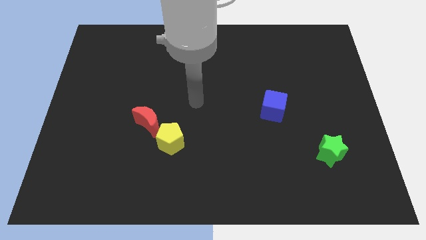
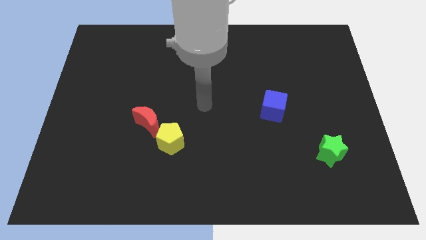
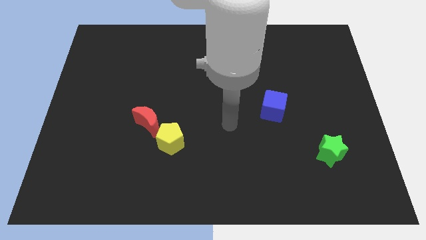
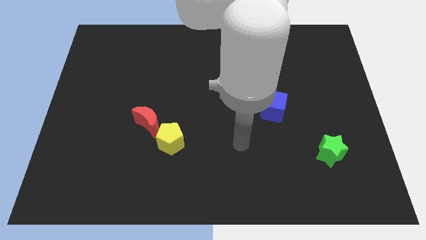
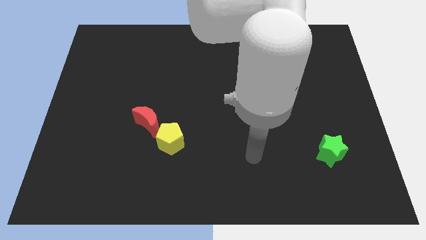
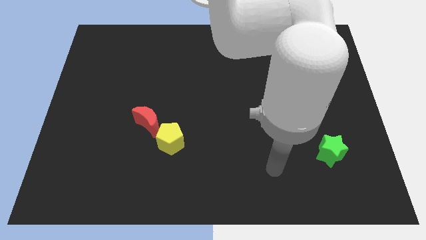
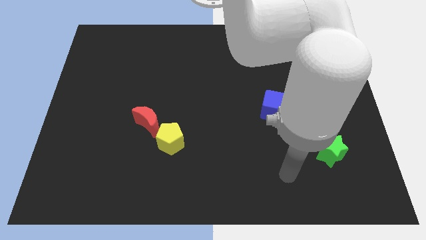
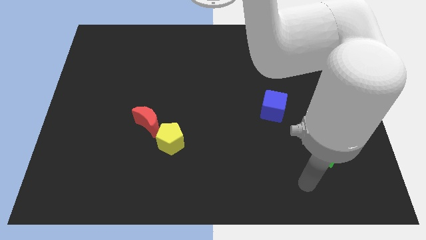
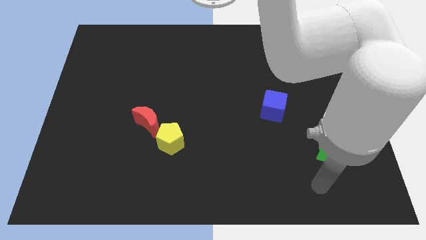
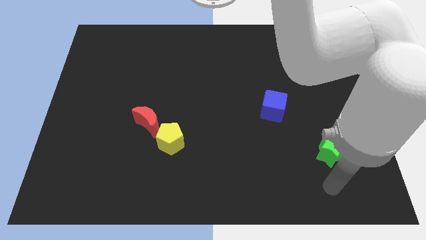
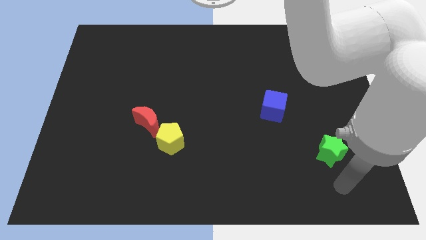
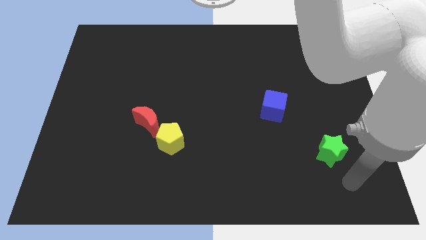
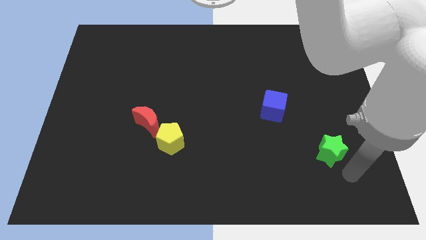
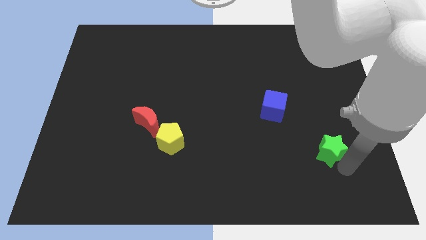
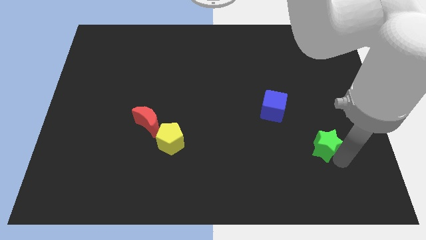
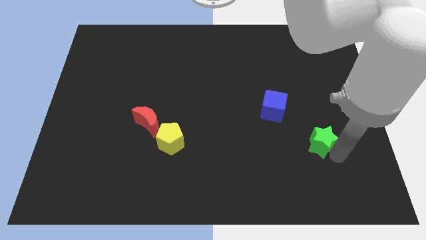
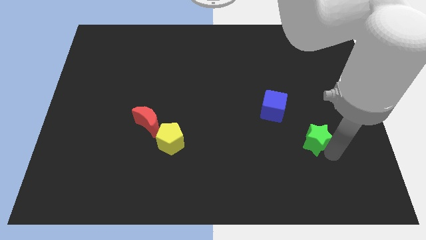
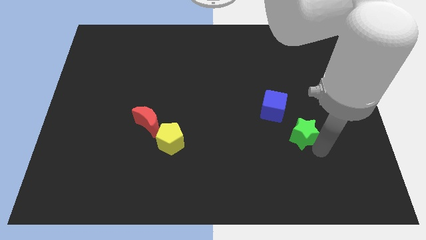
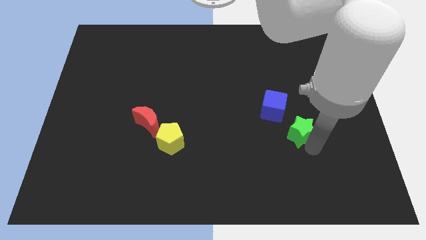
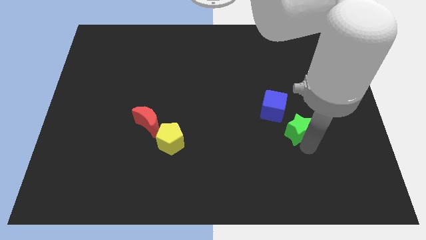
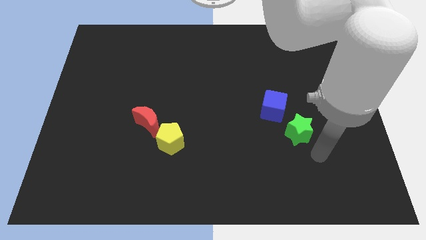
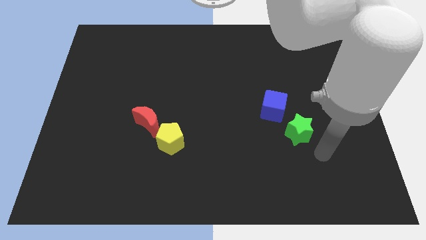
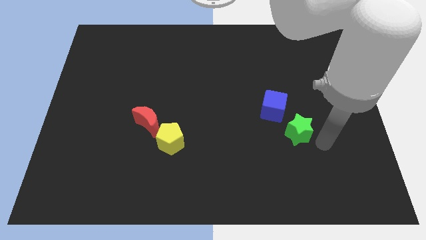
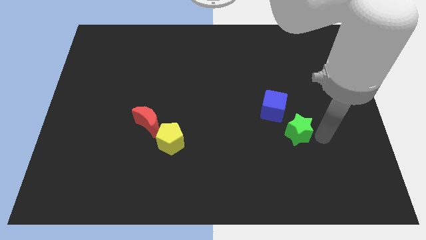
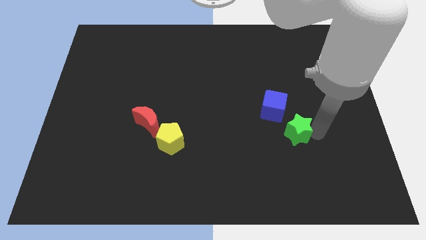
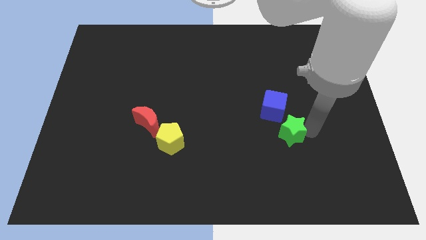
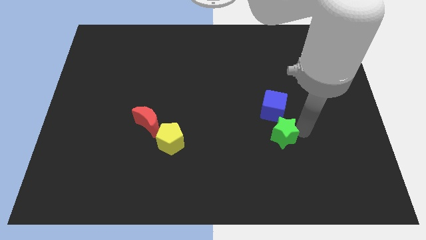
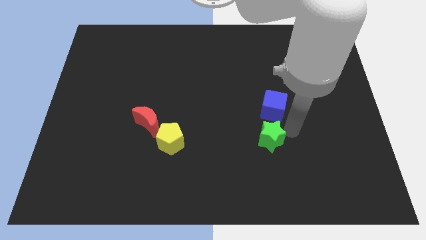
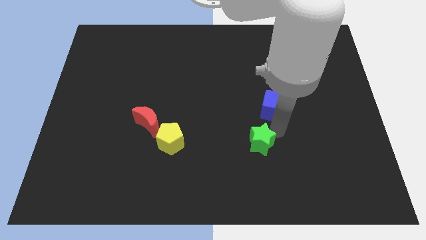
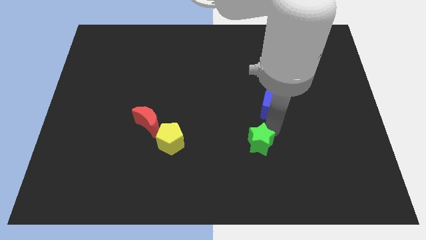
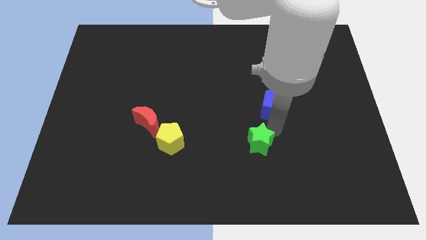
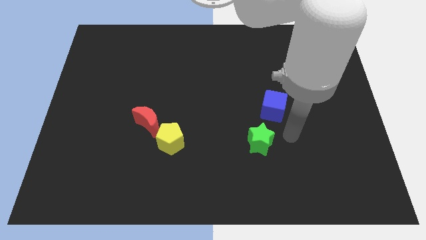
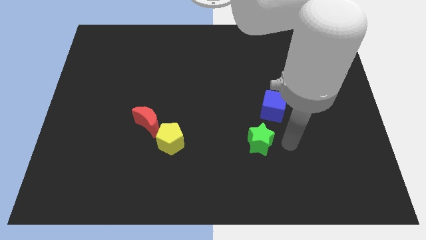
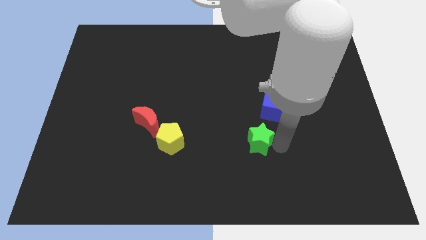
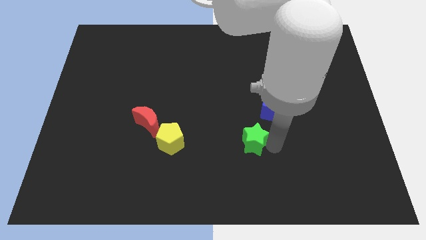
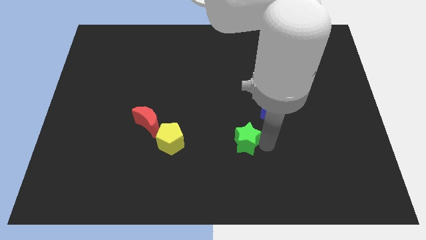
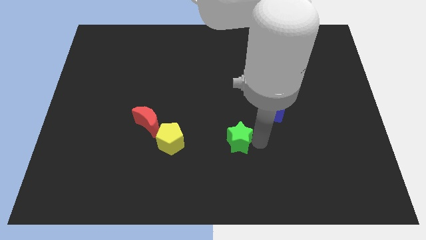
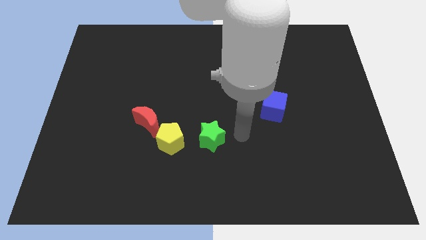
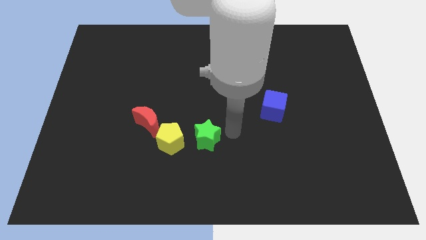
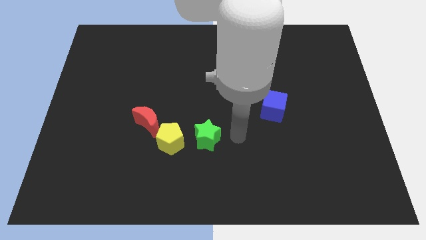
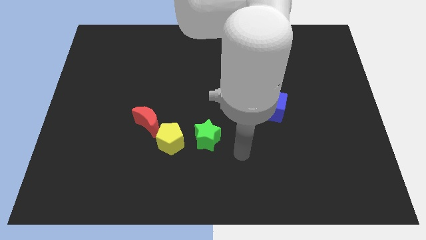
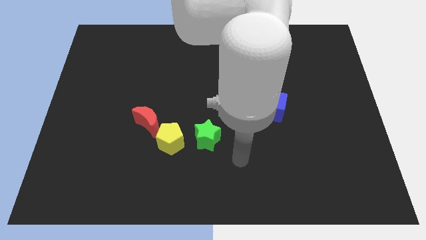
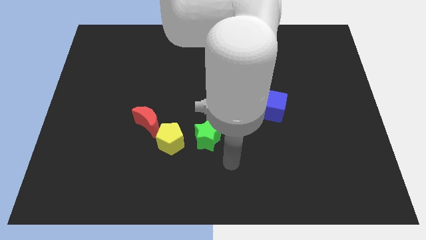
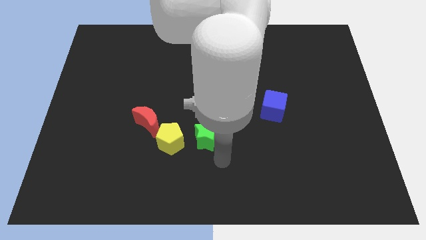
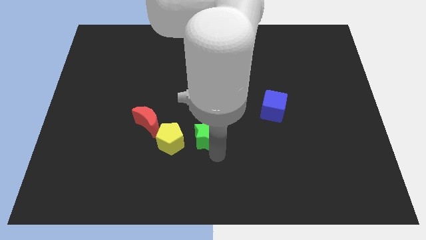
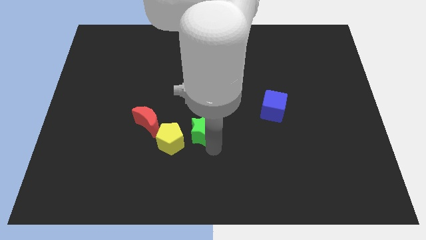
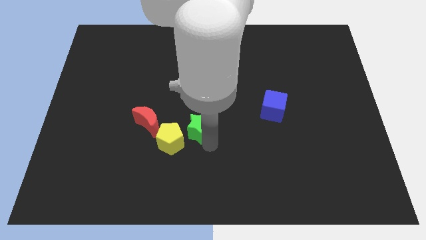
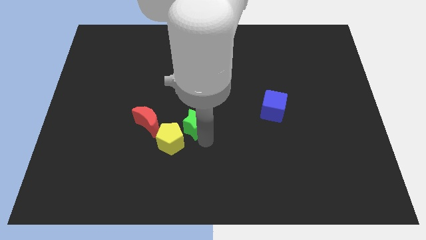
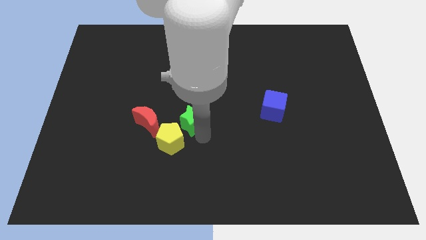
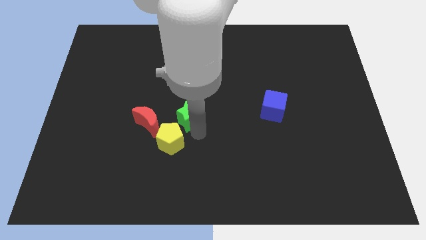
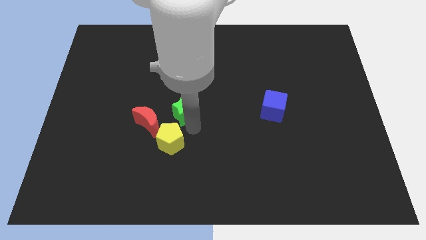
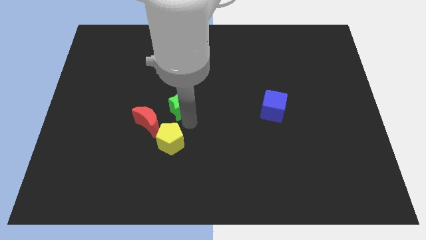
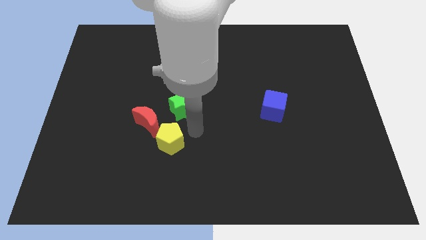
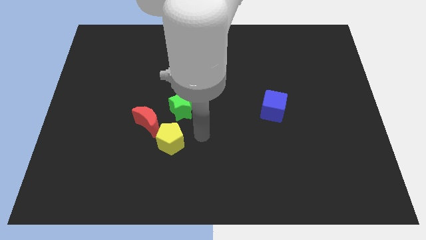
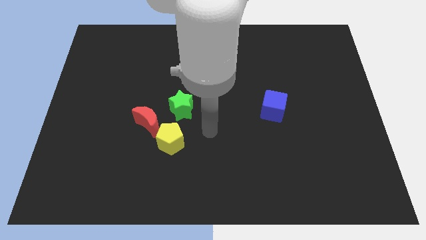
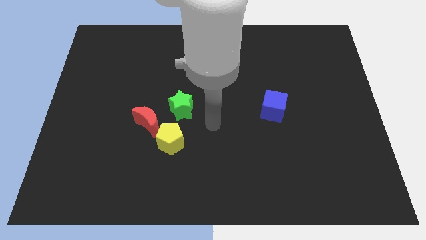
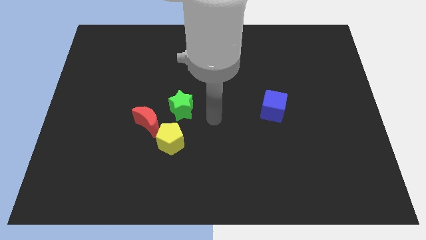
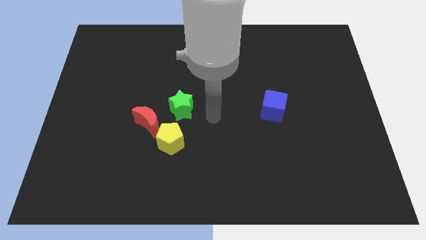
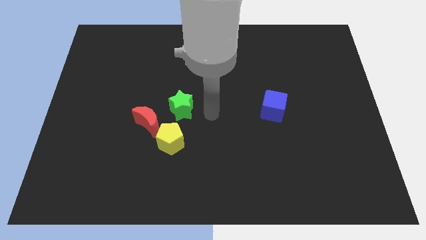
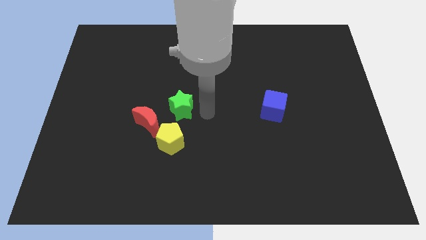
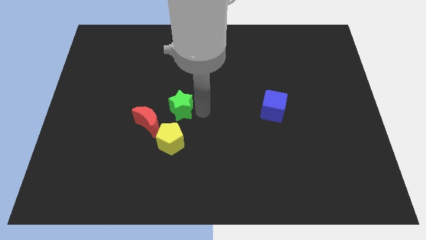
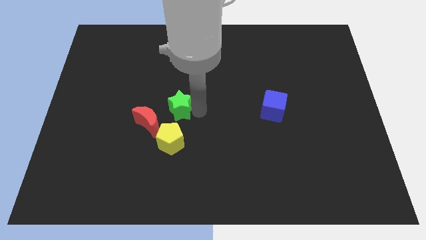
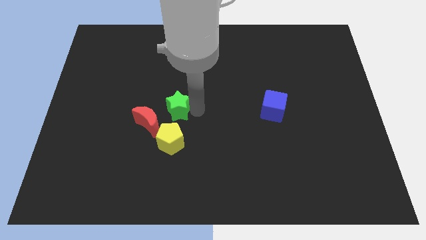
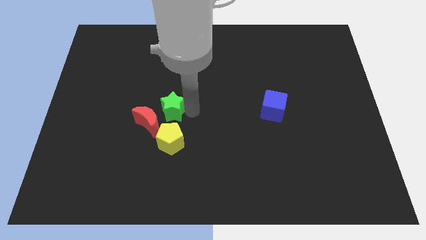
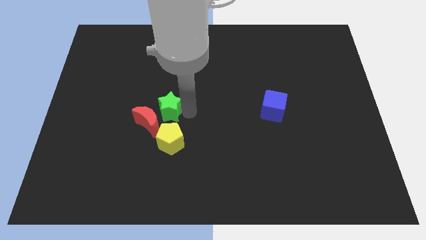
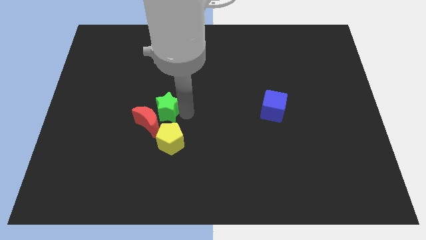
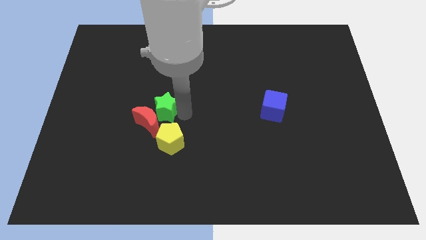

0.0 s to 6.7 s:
slide the star to the moon

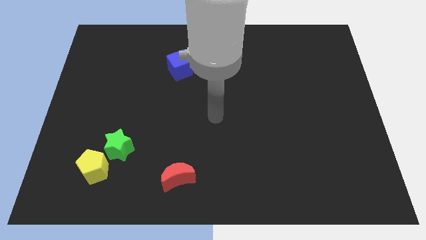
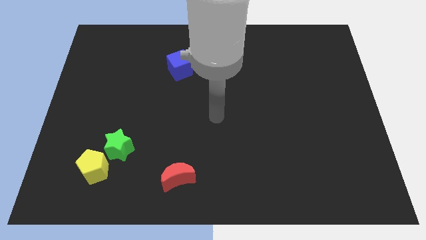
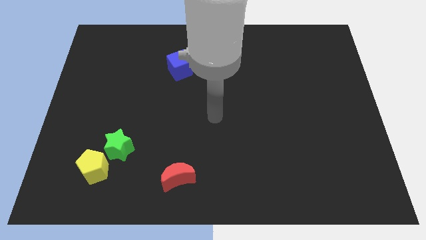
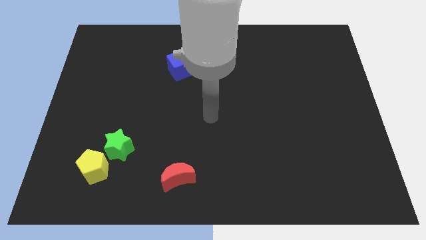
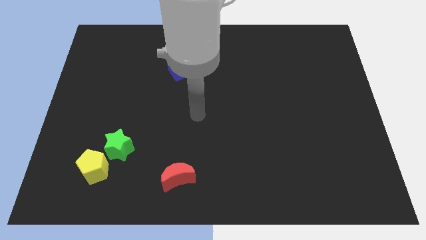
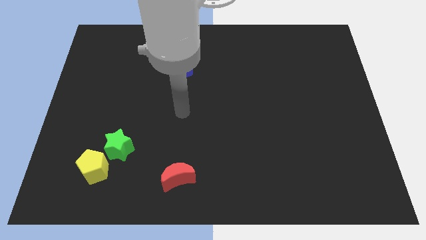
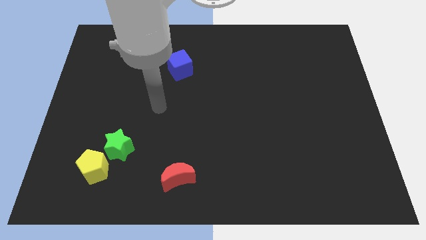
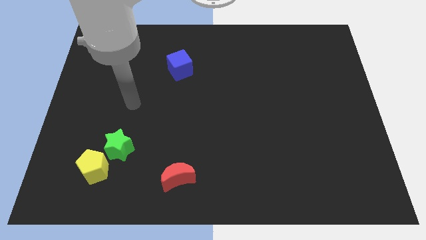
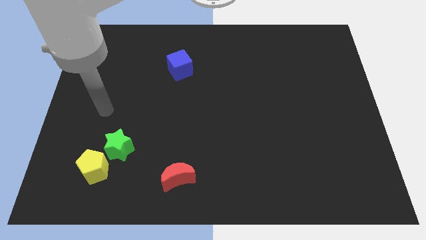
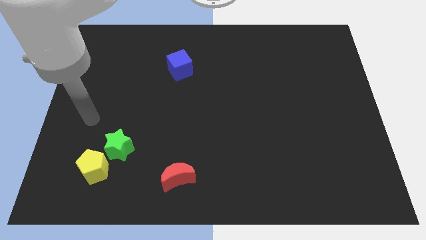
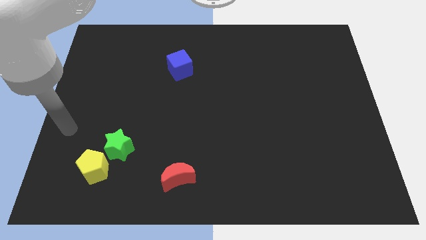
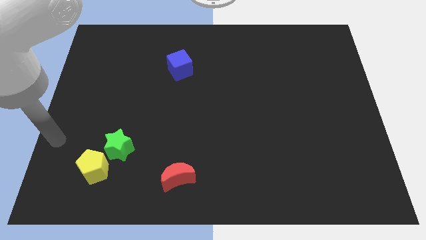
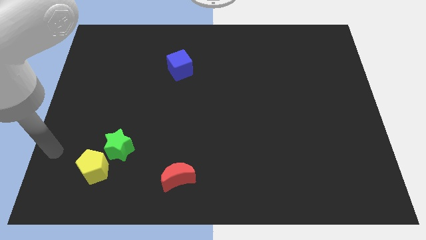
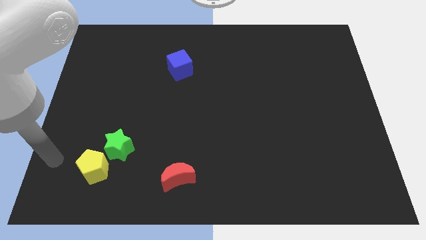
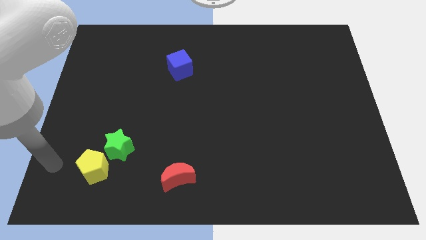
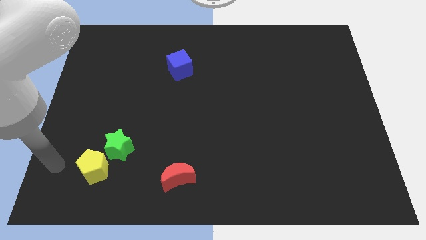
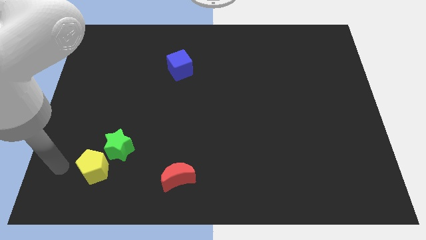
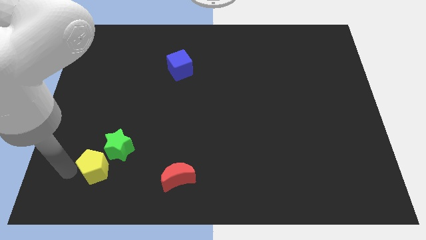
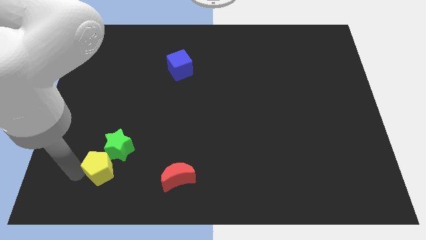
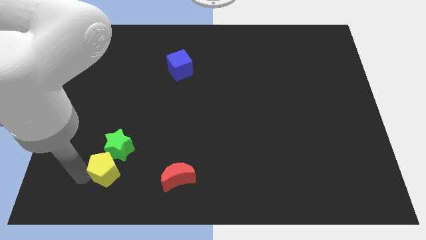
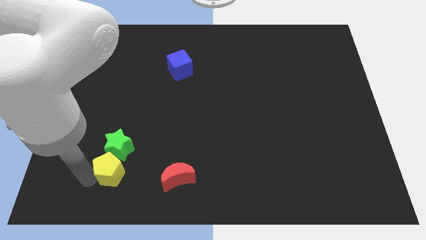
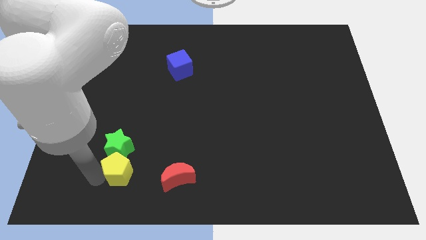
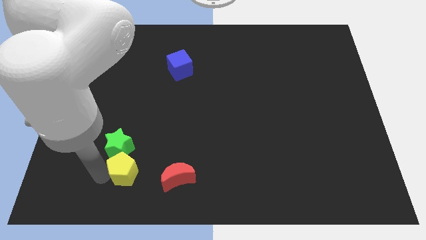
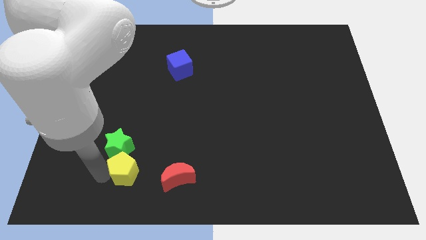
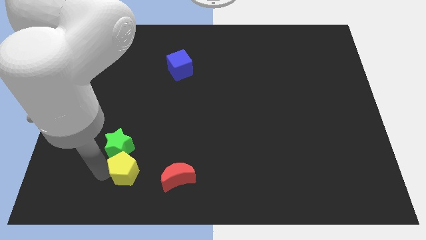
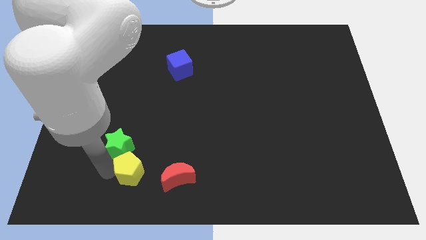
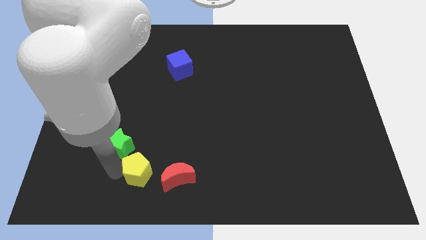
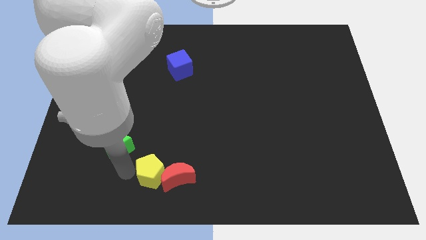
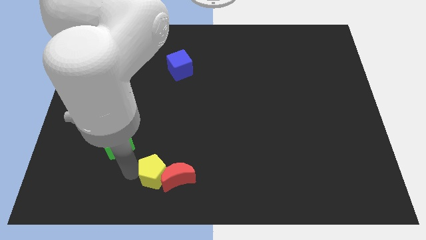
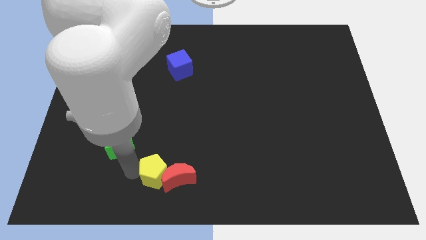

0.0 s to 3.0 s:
put the pentagon next to the red moon
